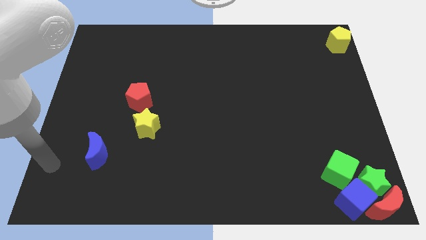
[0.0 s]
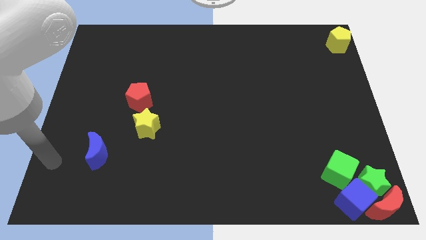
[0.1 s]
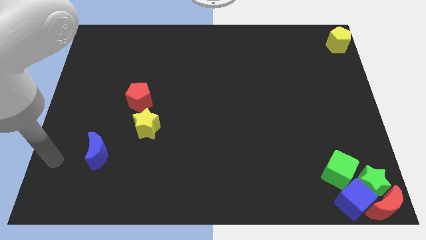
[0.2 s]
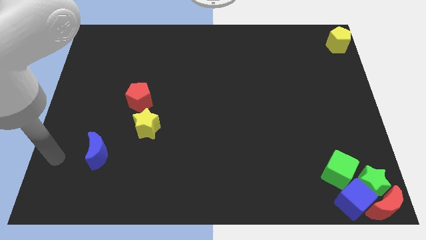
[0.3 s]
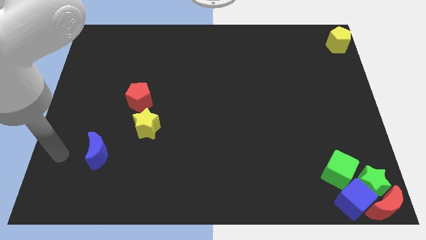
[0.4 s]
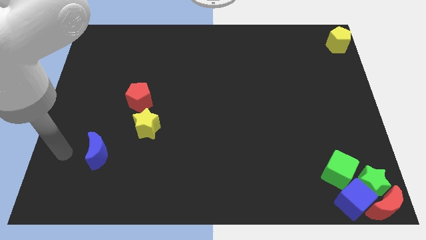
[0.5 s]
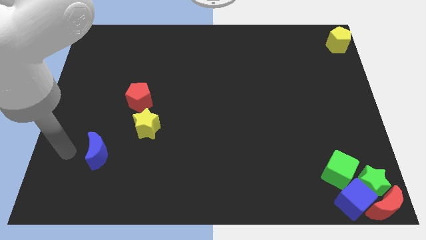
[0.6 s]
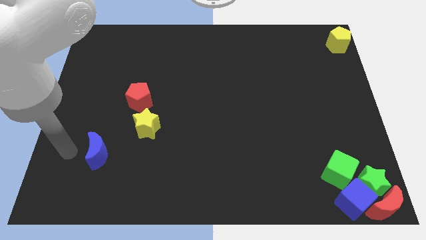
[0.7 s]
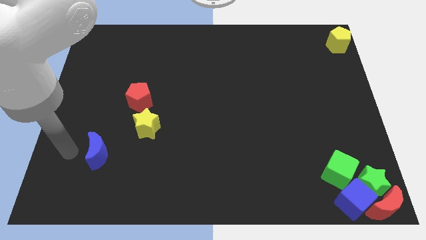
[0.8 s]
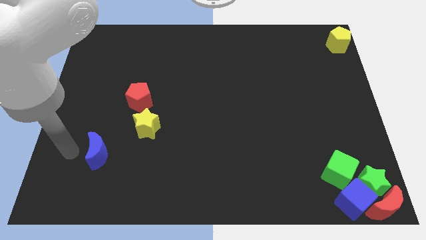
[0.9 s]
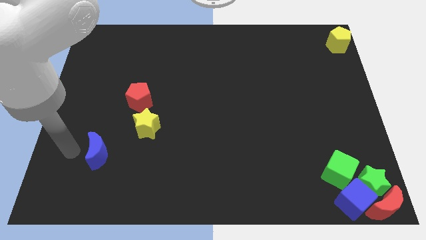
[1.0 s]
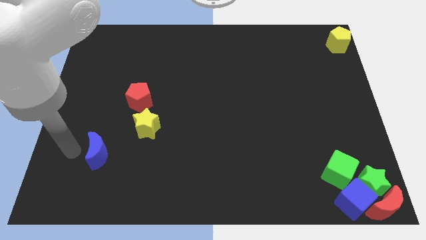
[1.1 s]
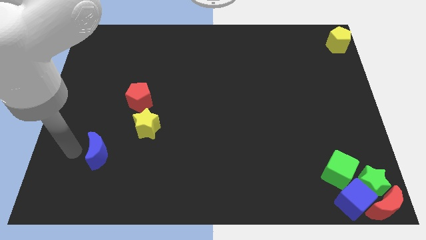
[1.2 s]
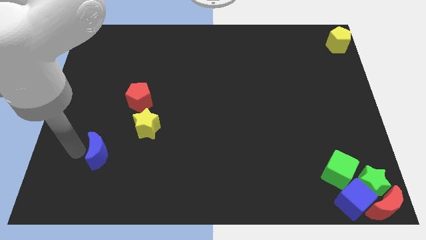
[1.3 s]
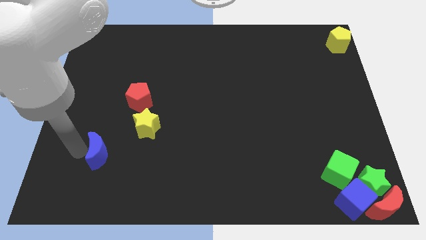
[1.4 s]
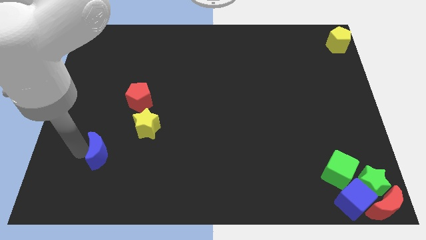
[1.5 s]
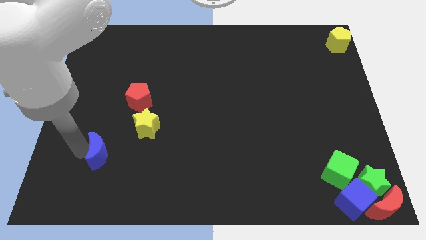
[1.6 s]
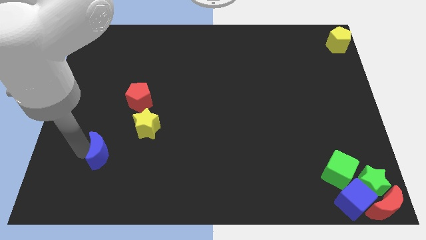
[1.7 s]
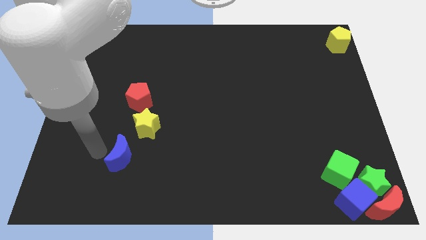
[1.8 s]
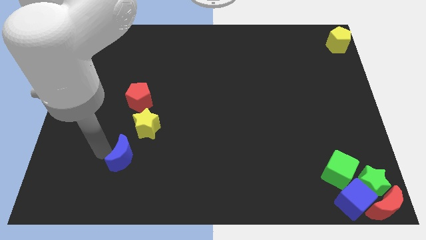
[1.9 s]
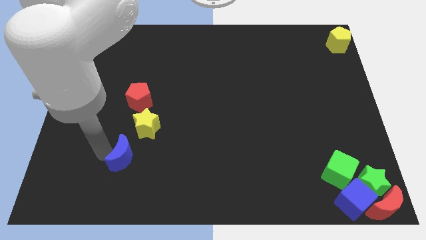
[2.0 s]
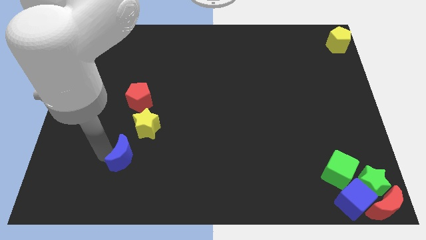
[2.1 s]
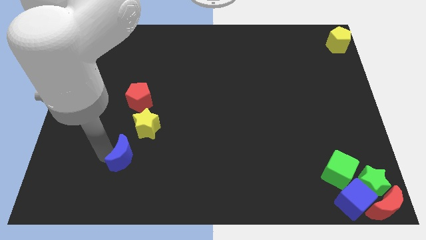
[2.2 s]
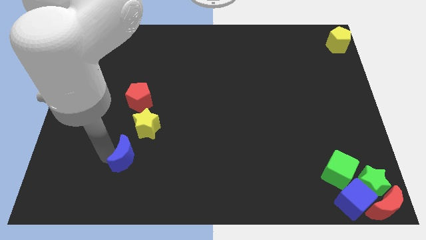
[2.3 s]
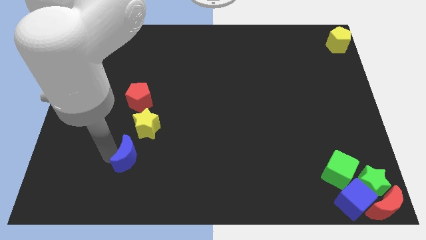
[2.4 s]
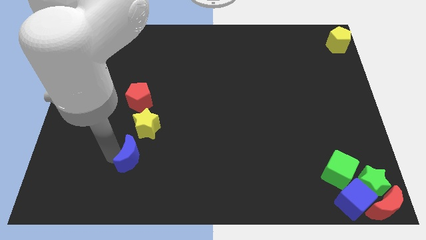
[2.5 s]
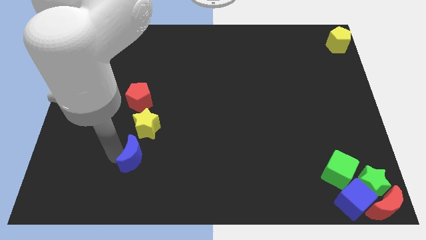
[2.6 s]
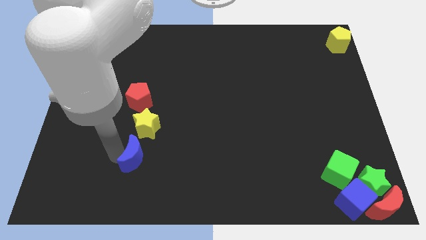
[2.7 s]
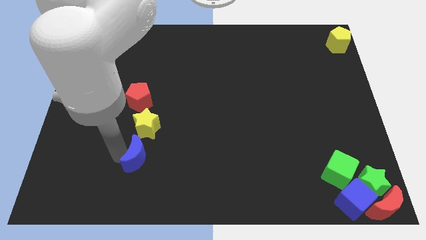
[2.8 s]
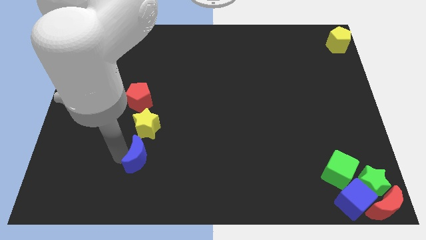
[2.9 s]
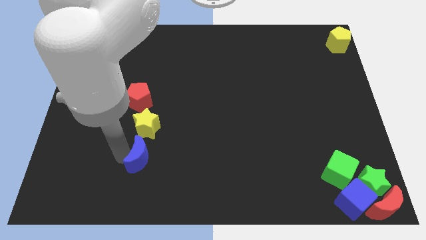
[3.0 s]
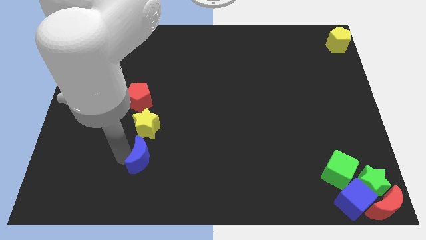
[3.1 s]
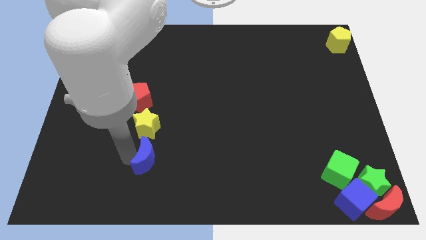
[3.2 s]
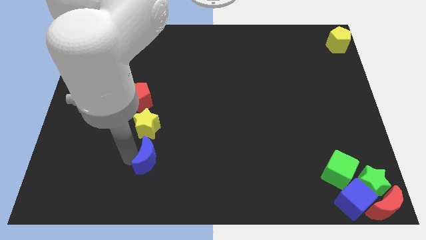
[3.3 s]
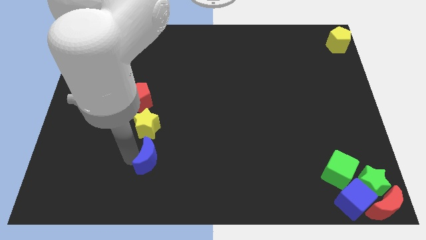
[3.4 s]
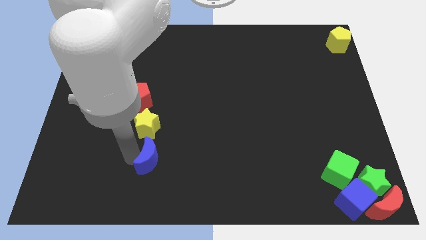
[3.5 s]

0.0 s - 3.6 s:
move the blue crescent to the bottom of the yellow star

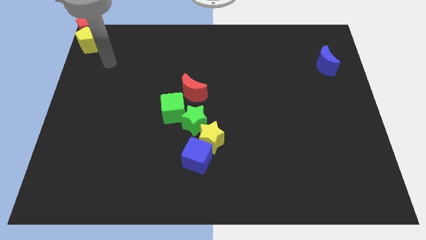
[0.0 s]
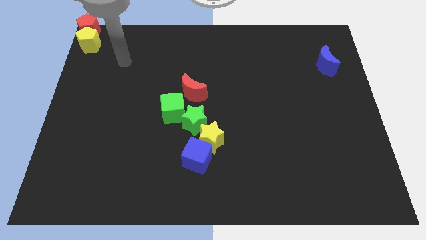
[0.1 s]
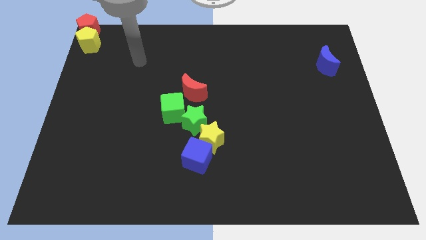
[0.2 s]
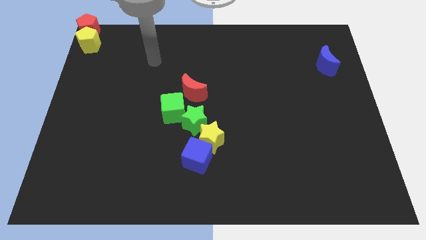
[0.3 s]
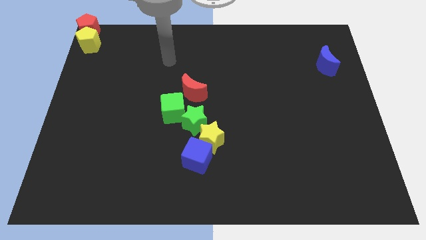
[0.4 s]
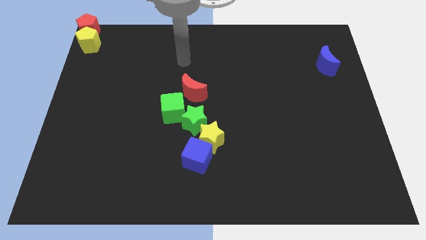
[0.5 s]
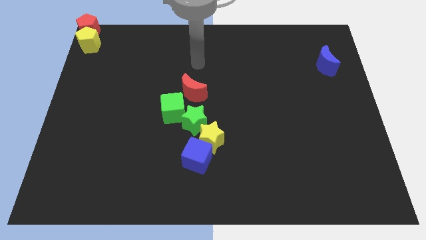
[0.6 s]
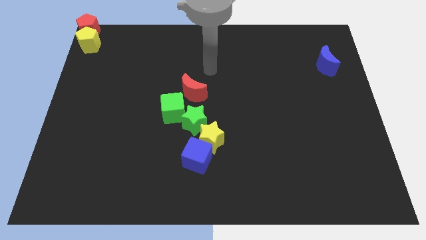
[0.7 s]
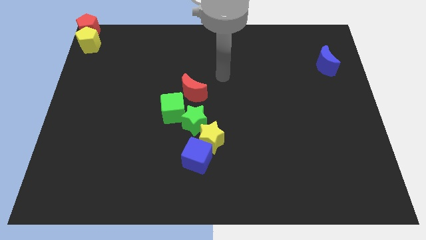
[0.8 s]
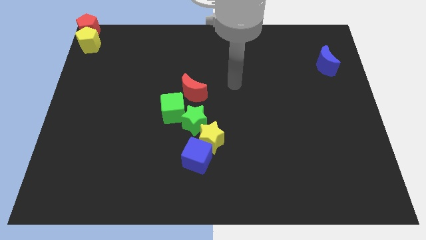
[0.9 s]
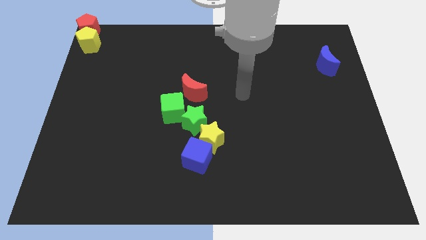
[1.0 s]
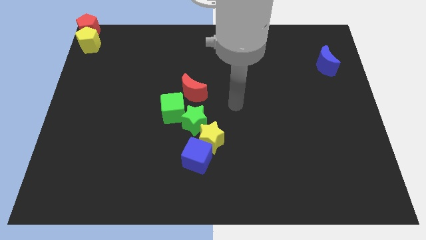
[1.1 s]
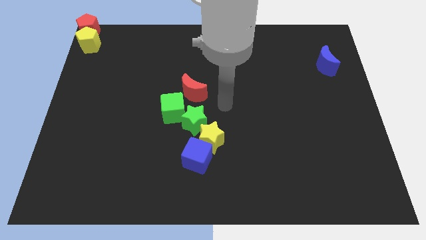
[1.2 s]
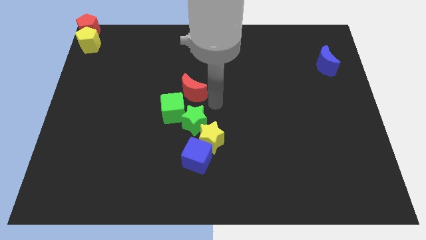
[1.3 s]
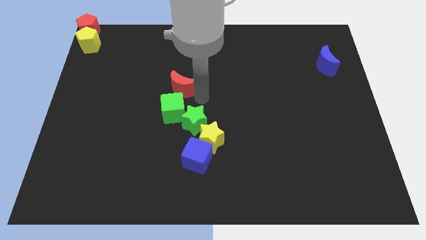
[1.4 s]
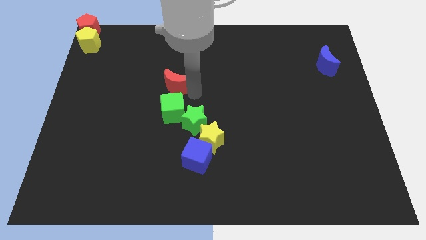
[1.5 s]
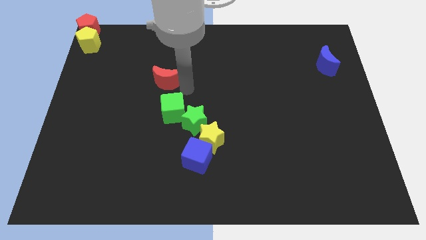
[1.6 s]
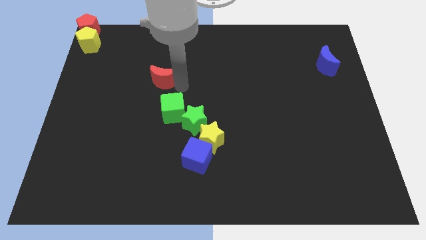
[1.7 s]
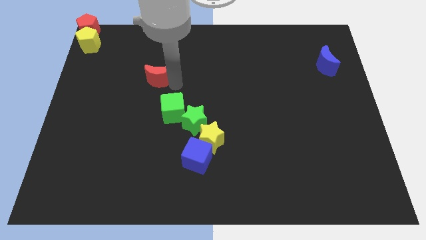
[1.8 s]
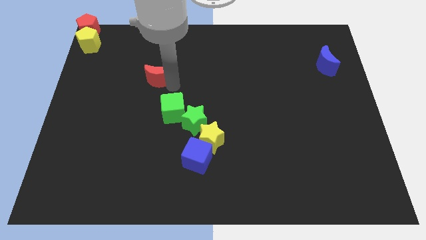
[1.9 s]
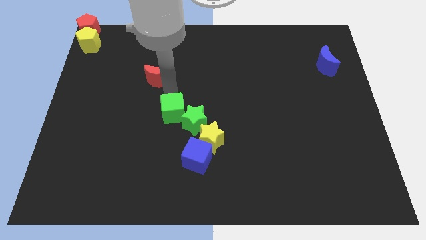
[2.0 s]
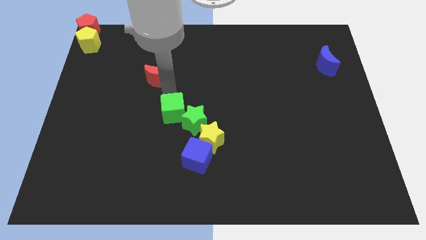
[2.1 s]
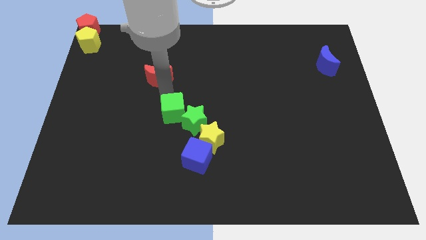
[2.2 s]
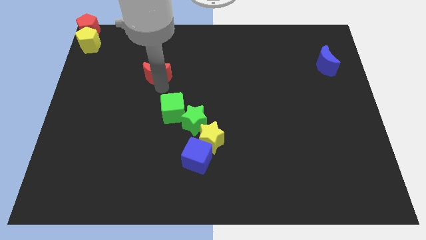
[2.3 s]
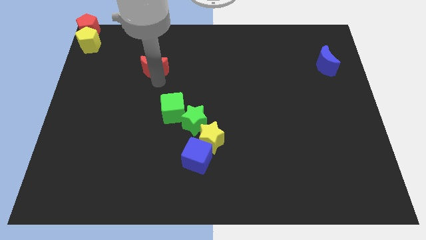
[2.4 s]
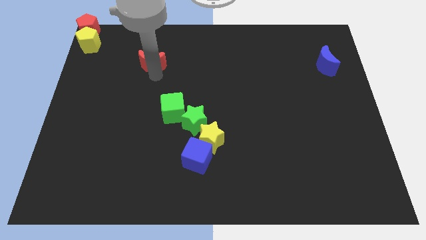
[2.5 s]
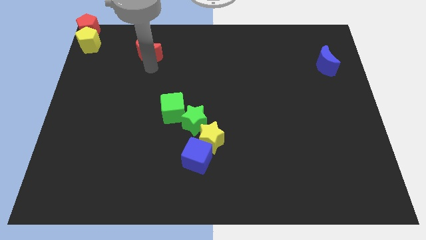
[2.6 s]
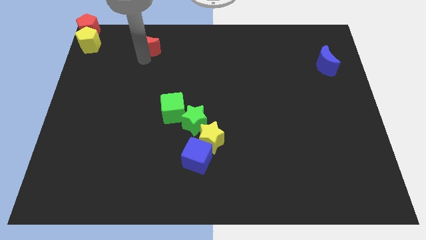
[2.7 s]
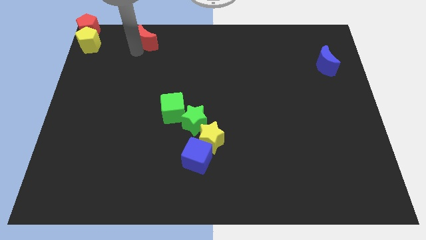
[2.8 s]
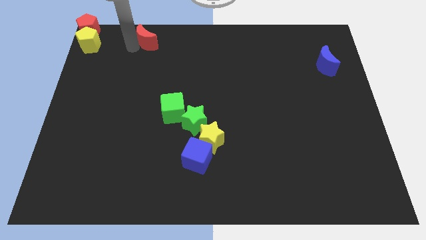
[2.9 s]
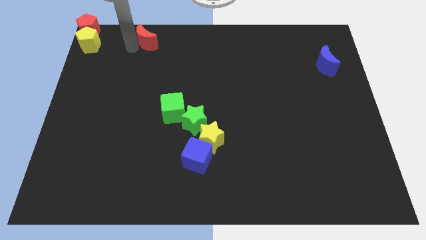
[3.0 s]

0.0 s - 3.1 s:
put the red crescent to the right of the yellow pentagon

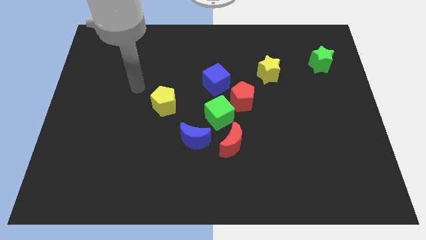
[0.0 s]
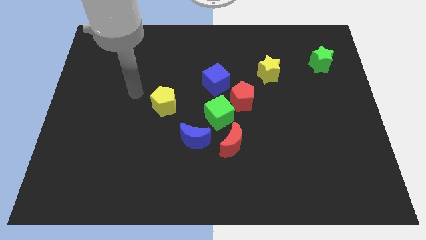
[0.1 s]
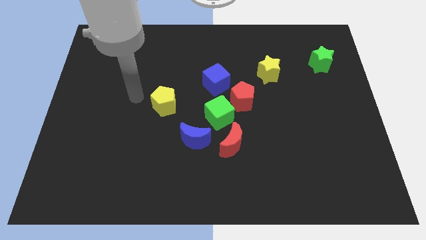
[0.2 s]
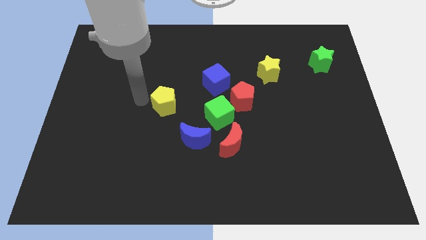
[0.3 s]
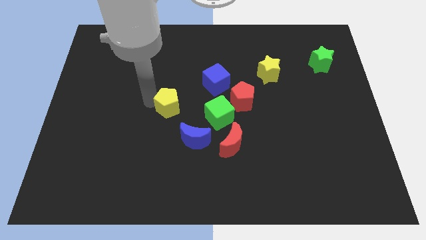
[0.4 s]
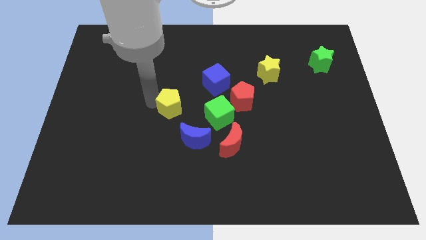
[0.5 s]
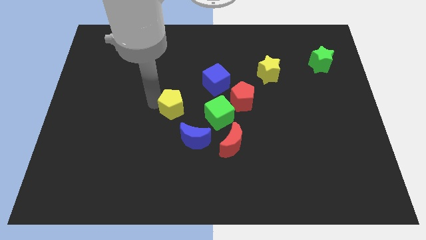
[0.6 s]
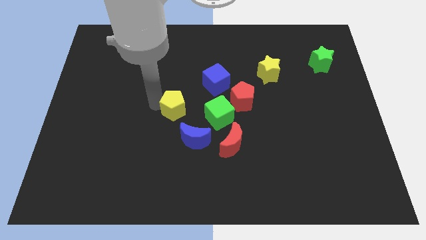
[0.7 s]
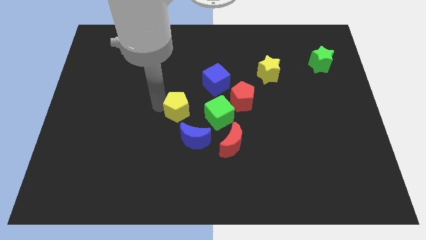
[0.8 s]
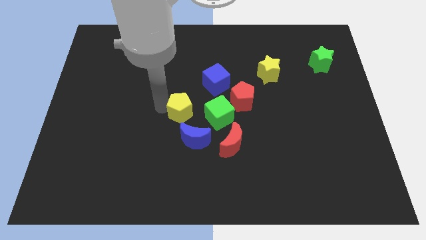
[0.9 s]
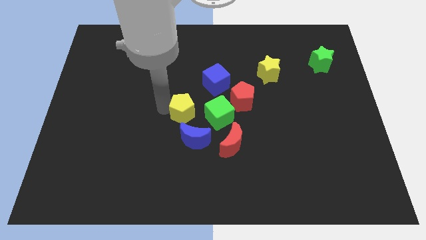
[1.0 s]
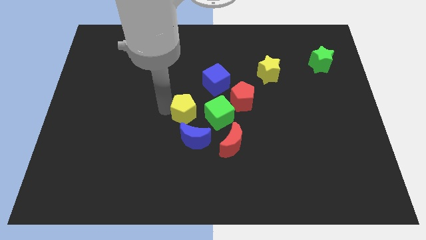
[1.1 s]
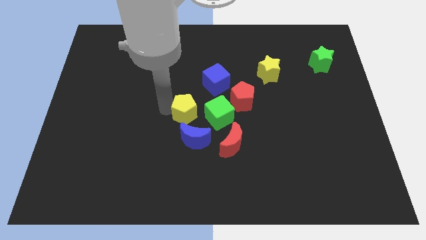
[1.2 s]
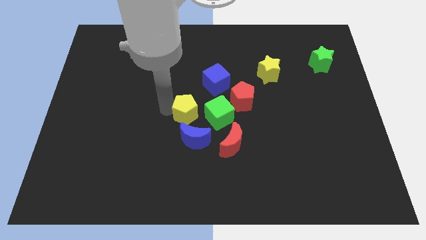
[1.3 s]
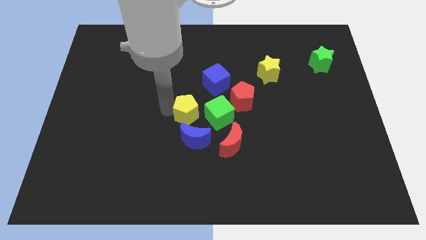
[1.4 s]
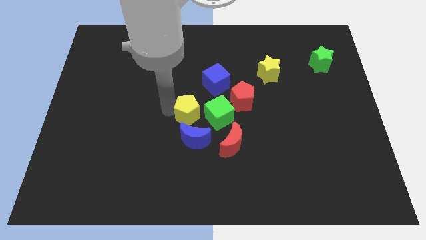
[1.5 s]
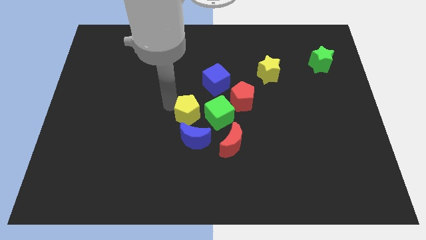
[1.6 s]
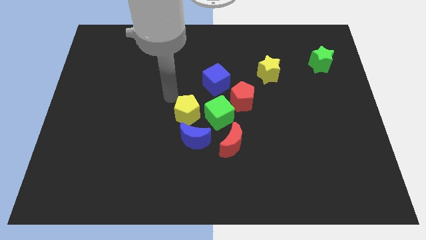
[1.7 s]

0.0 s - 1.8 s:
push the yellow pentagon left to the green cube

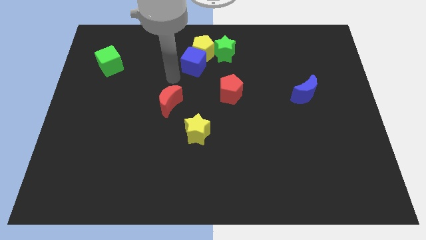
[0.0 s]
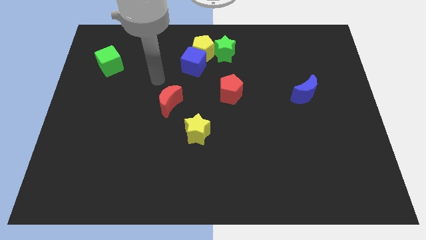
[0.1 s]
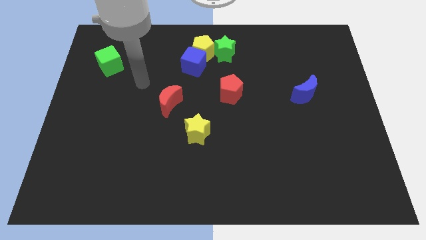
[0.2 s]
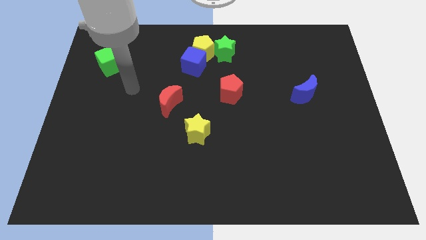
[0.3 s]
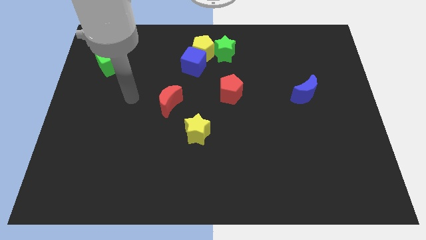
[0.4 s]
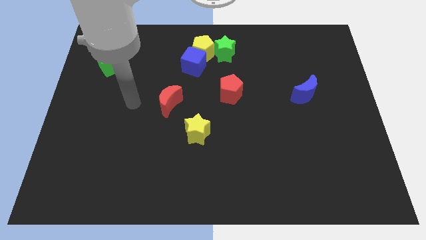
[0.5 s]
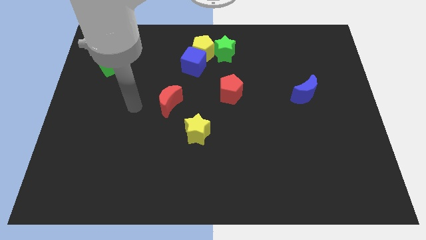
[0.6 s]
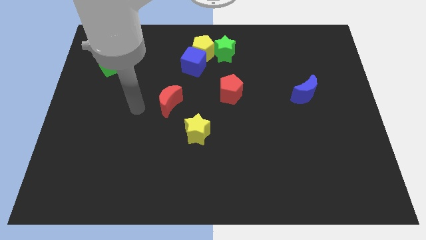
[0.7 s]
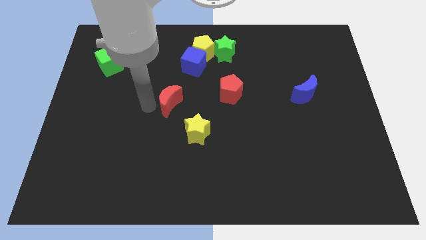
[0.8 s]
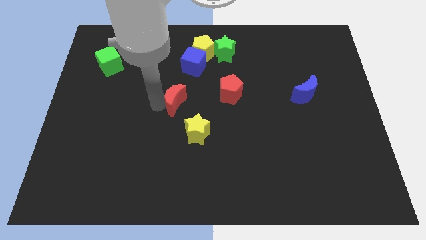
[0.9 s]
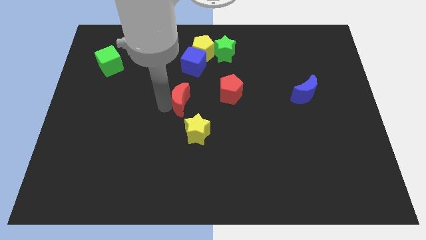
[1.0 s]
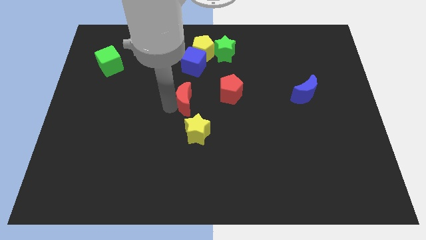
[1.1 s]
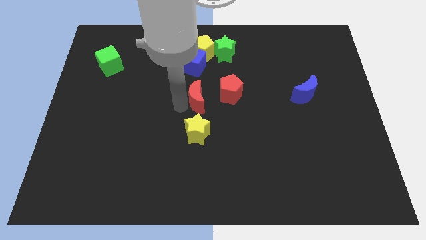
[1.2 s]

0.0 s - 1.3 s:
push red crescent to the top of the yellow star
